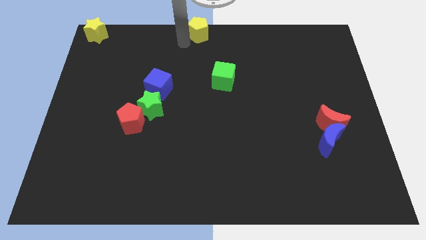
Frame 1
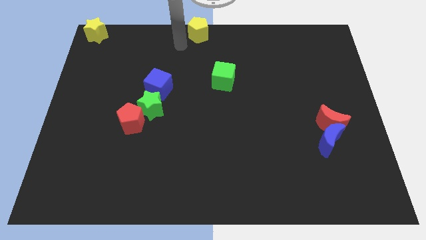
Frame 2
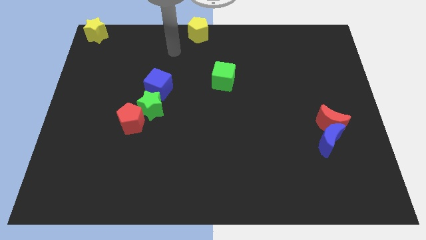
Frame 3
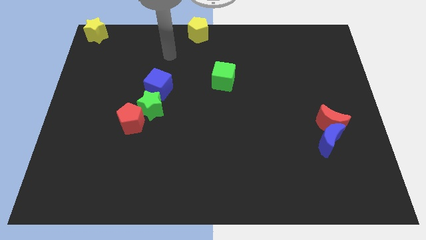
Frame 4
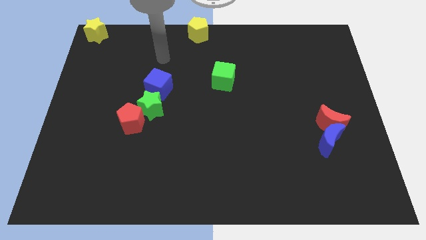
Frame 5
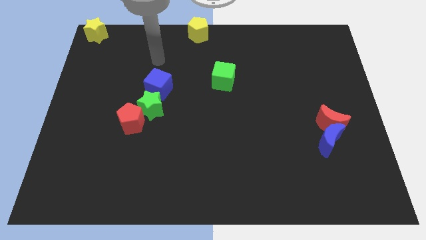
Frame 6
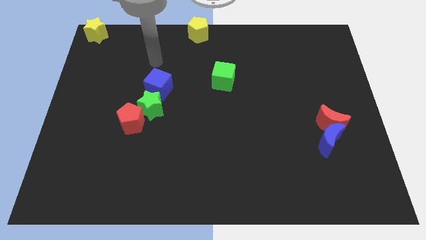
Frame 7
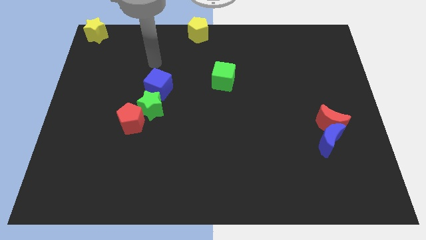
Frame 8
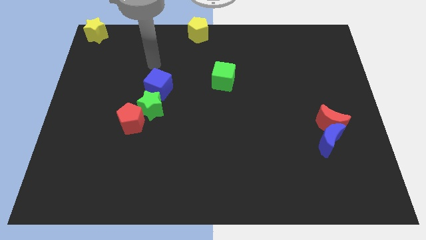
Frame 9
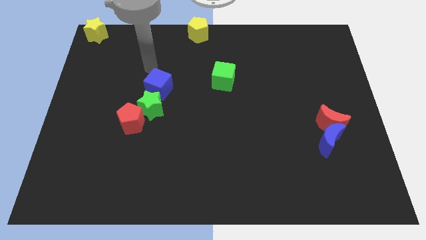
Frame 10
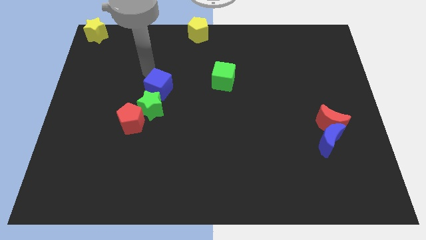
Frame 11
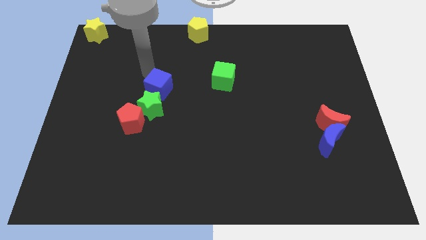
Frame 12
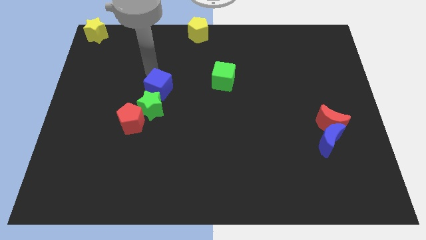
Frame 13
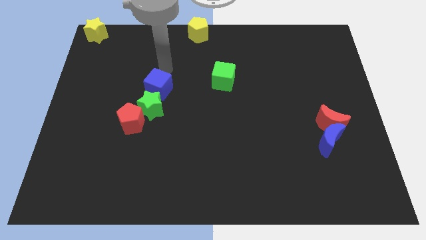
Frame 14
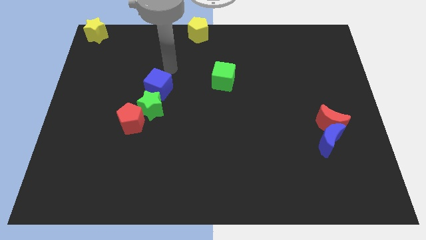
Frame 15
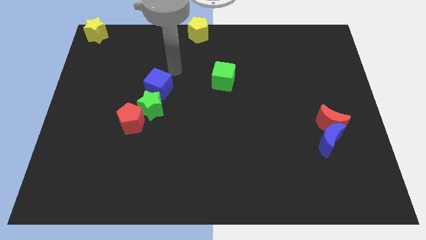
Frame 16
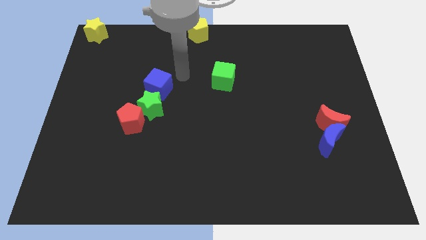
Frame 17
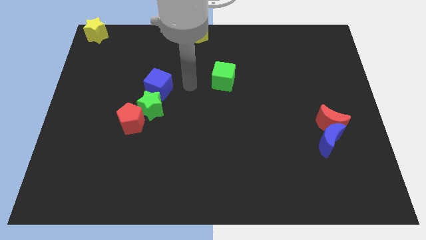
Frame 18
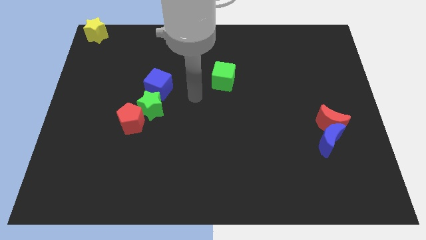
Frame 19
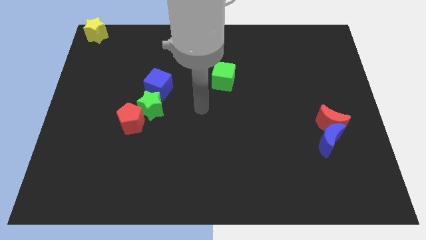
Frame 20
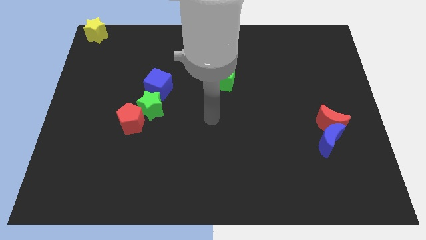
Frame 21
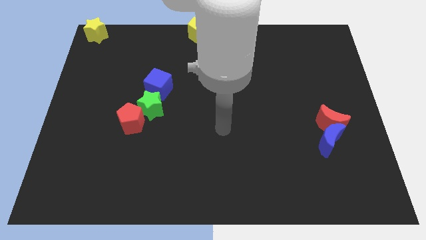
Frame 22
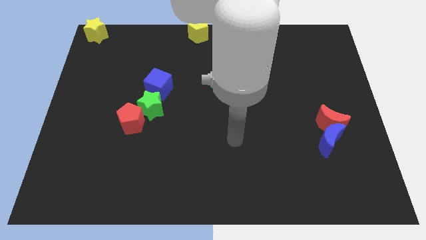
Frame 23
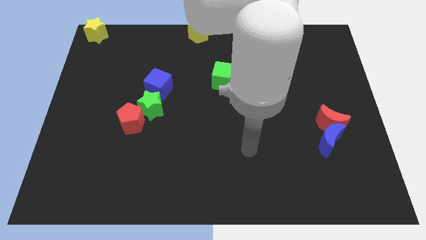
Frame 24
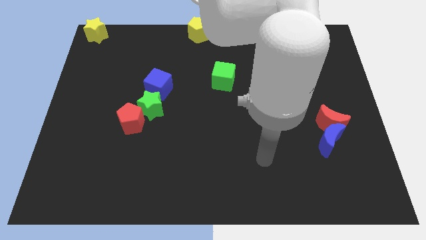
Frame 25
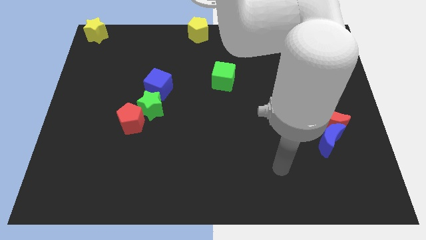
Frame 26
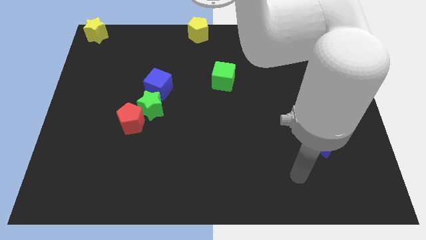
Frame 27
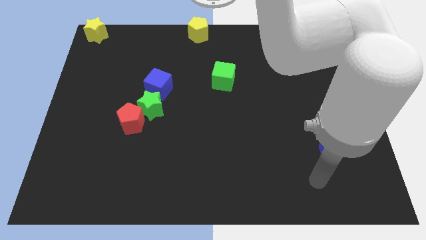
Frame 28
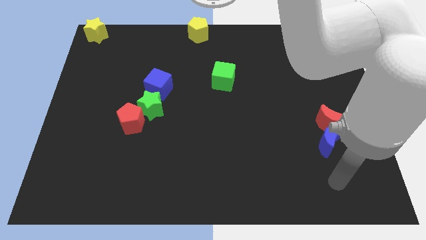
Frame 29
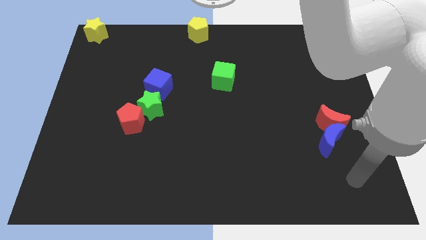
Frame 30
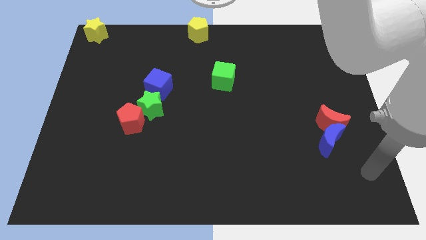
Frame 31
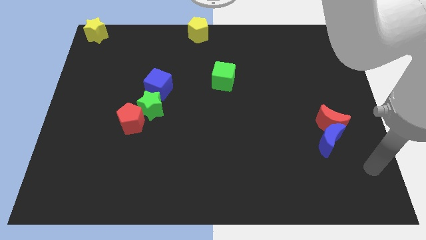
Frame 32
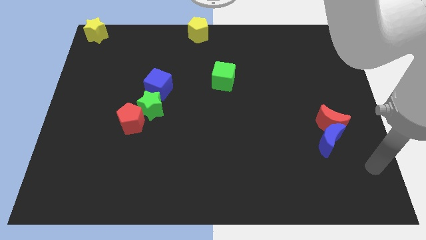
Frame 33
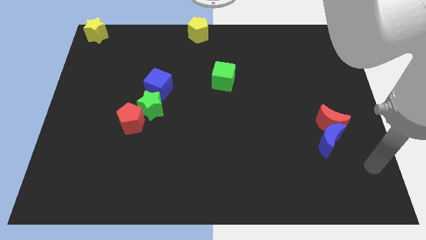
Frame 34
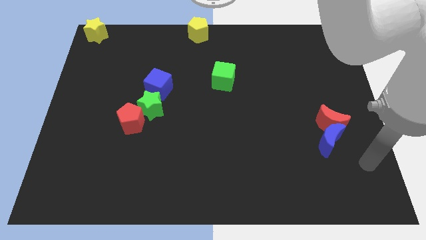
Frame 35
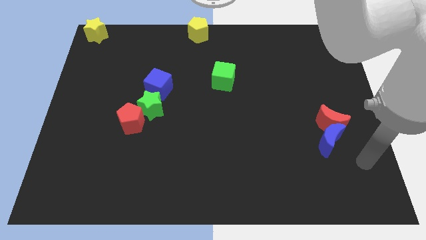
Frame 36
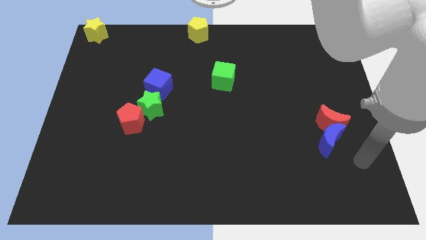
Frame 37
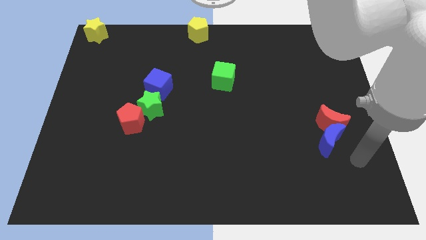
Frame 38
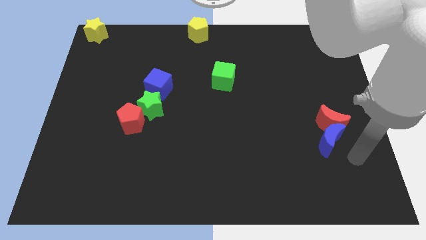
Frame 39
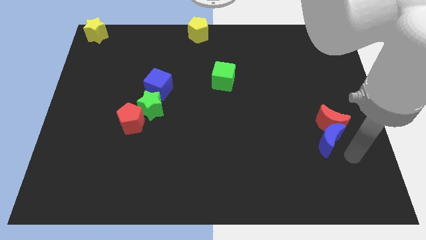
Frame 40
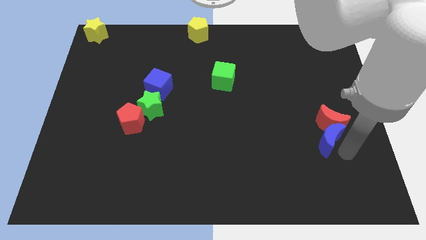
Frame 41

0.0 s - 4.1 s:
place your arm to the right side of blue moon

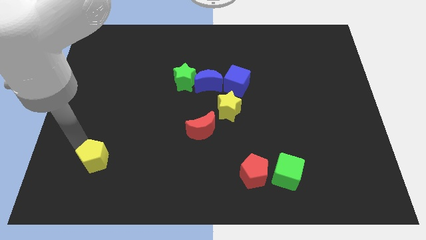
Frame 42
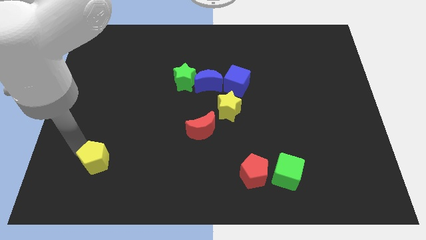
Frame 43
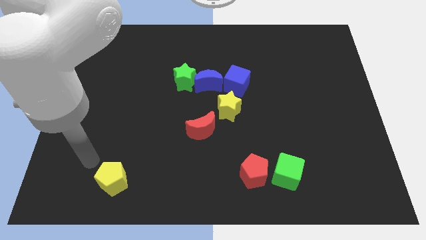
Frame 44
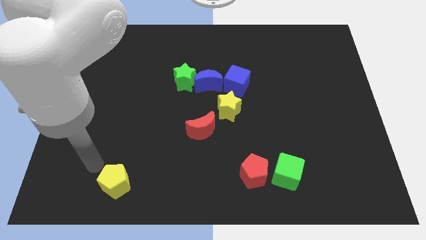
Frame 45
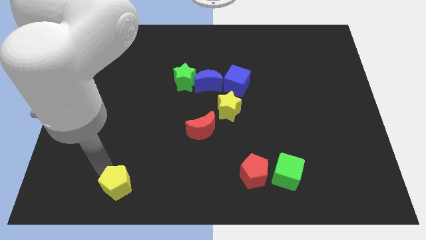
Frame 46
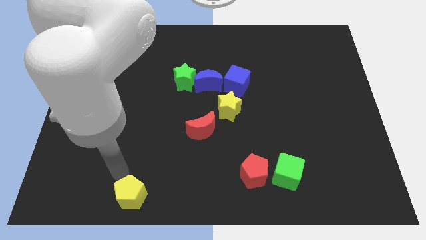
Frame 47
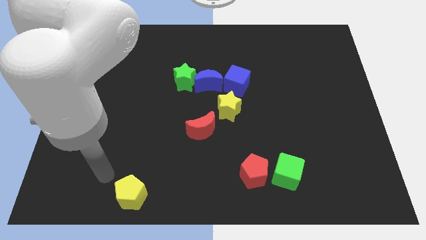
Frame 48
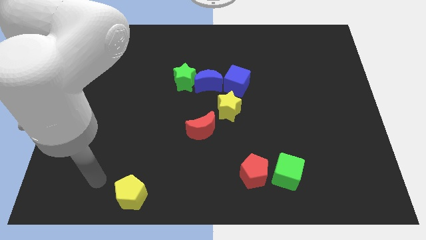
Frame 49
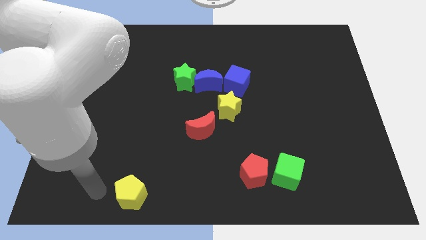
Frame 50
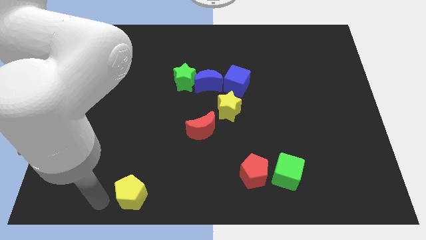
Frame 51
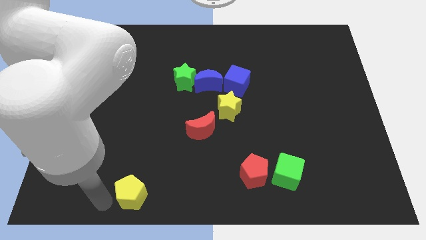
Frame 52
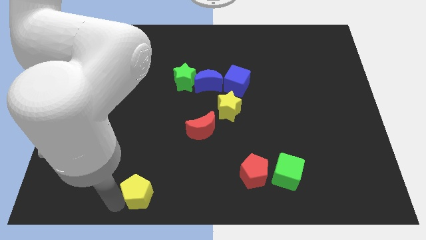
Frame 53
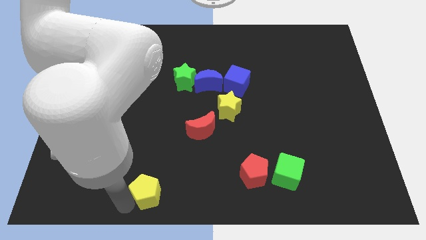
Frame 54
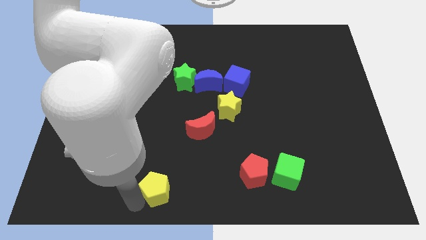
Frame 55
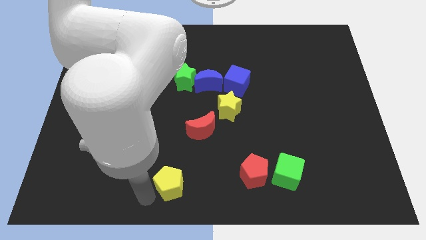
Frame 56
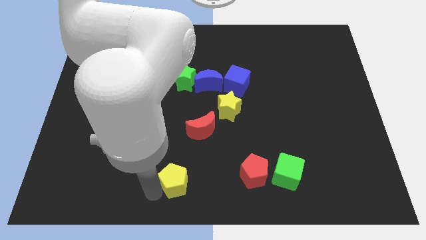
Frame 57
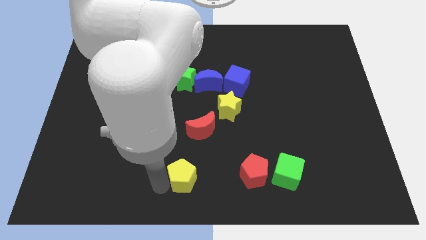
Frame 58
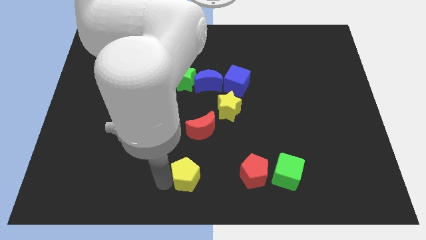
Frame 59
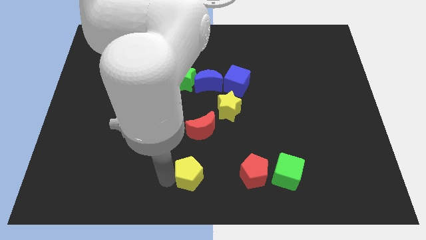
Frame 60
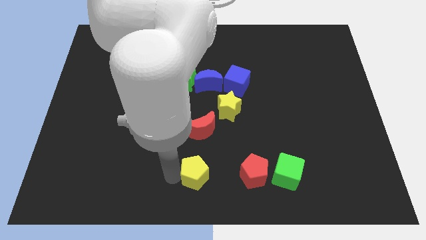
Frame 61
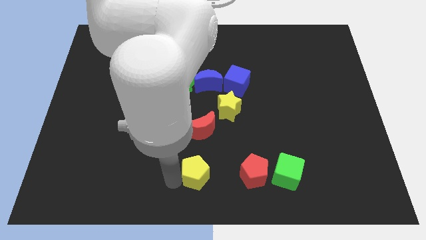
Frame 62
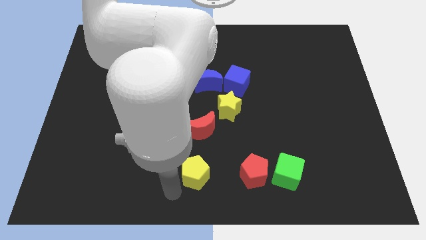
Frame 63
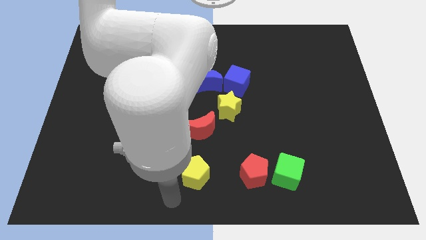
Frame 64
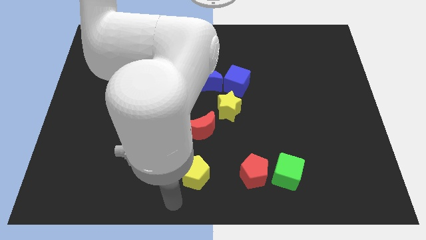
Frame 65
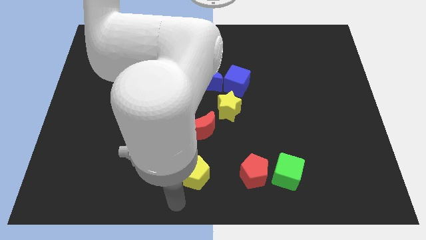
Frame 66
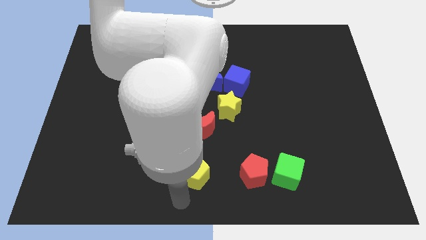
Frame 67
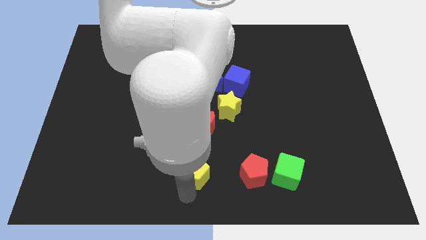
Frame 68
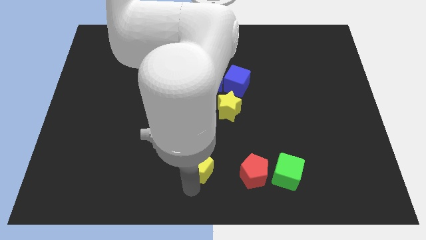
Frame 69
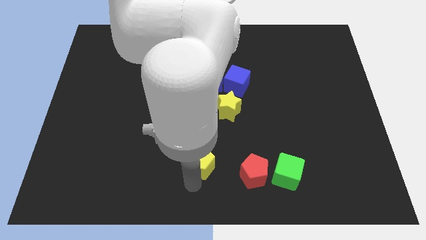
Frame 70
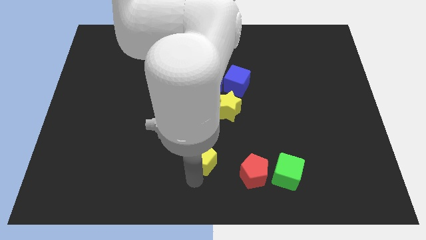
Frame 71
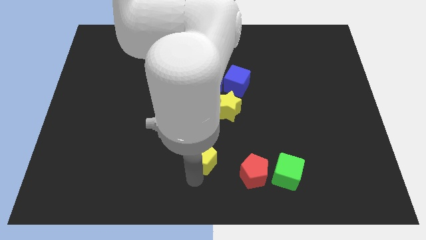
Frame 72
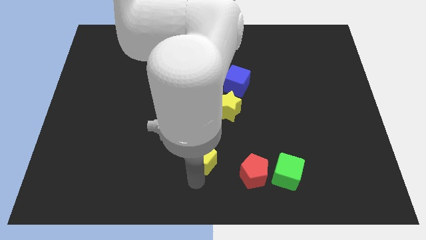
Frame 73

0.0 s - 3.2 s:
push yellow pentagon below red crescent

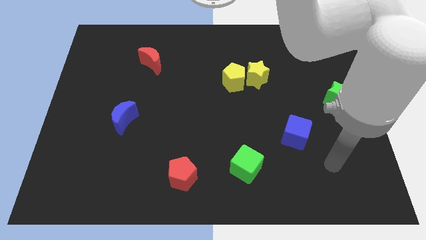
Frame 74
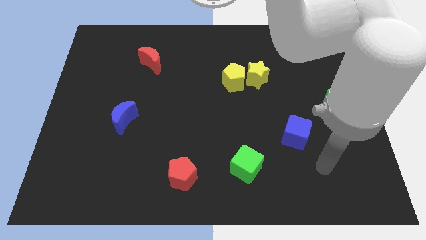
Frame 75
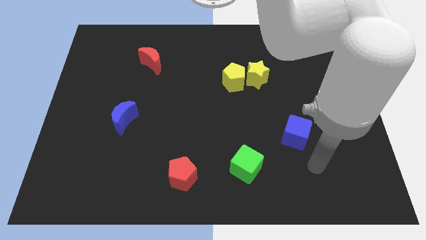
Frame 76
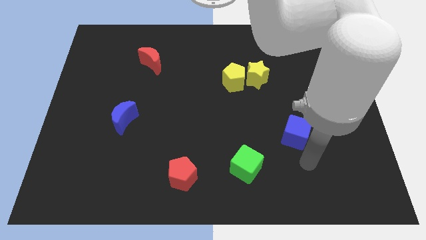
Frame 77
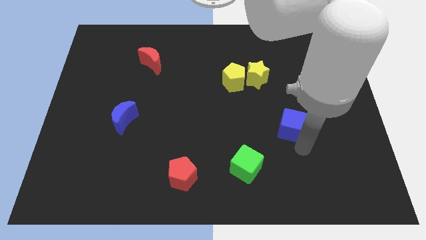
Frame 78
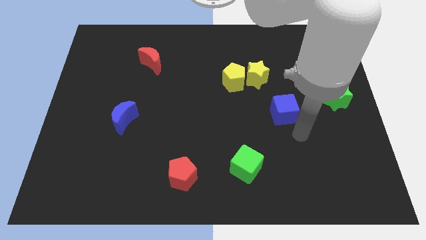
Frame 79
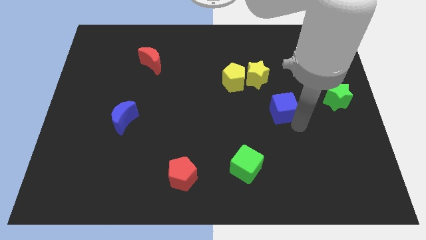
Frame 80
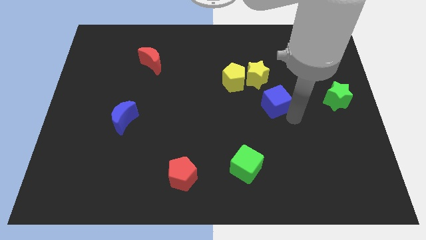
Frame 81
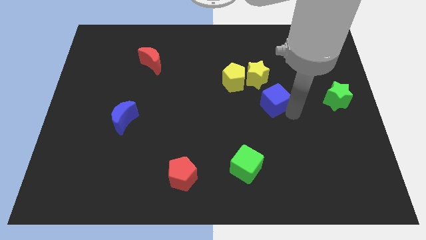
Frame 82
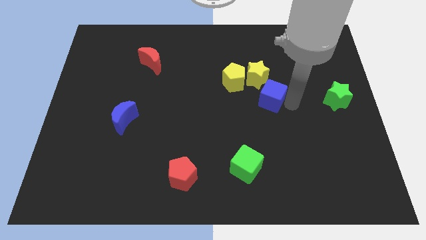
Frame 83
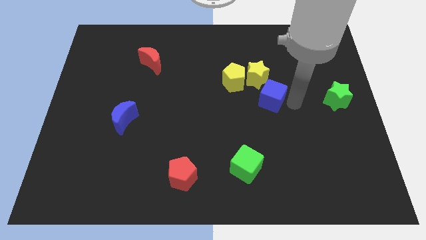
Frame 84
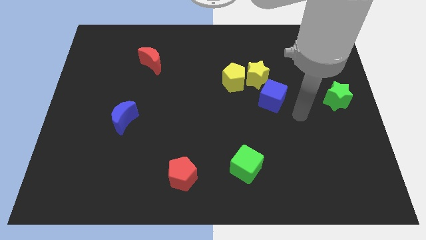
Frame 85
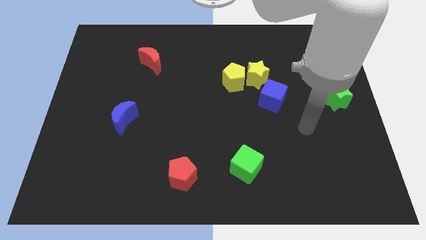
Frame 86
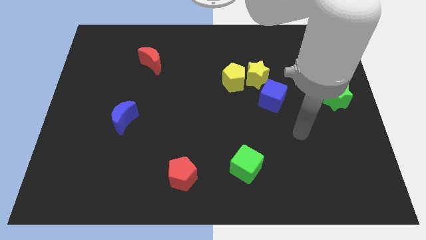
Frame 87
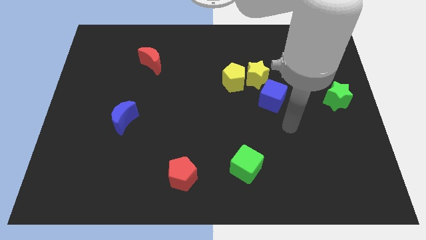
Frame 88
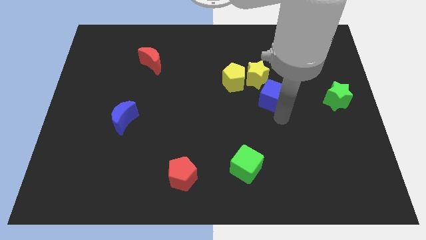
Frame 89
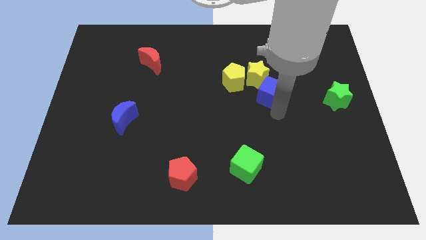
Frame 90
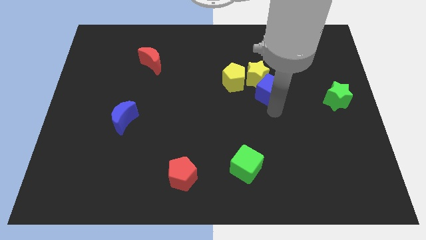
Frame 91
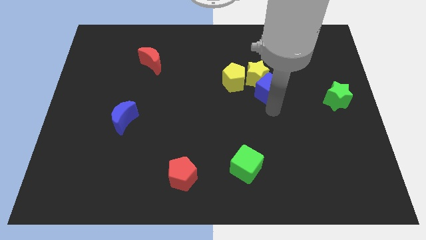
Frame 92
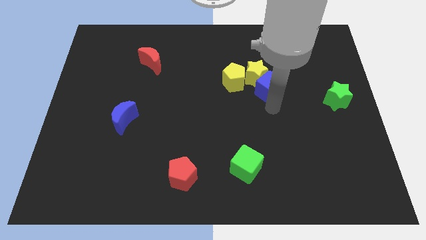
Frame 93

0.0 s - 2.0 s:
place the blue cube below the yellow star
